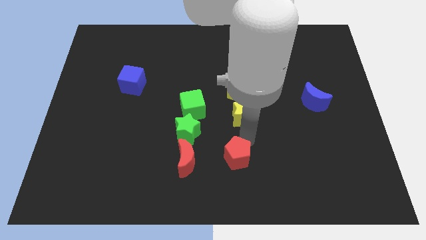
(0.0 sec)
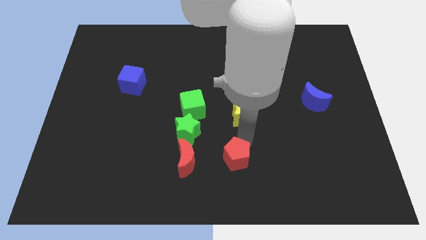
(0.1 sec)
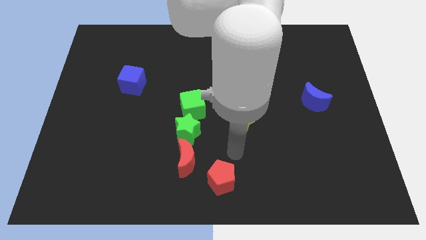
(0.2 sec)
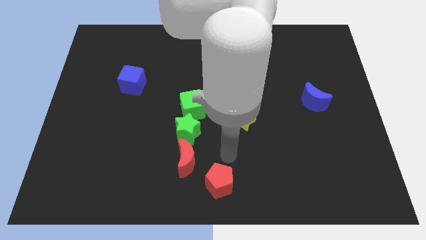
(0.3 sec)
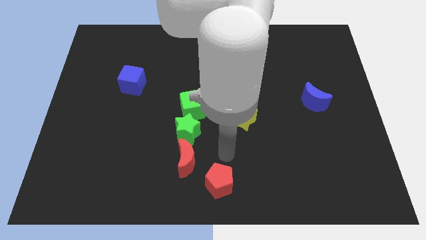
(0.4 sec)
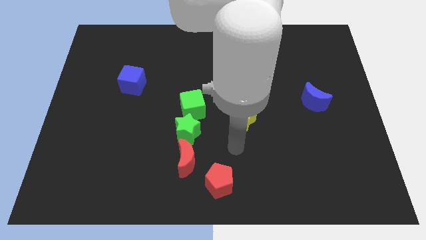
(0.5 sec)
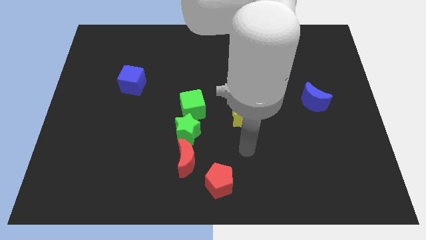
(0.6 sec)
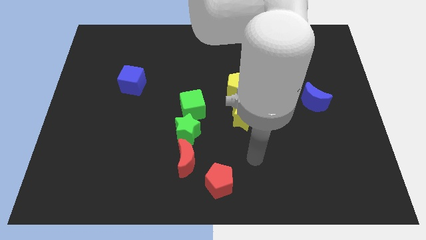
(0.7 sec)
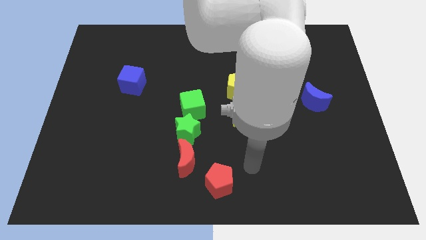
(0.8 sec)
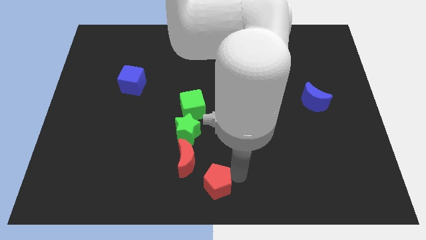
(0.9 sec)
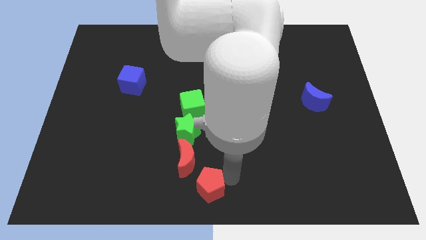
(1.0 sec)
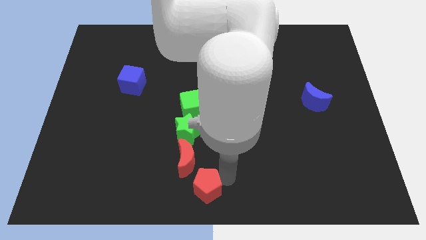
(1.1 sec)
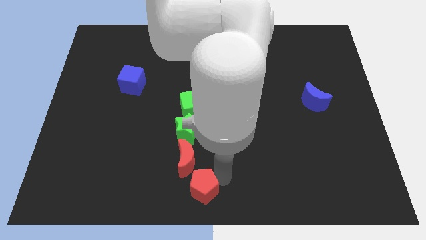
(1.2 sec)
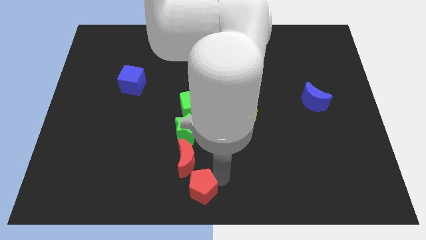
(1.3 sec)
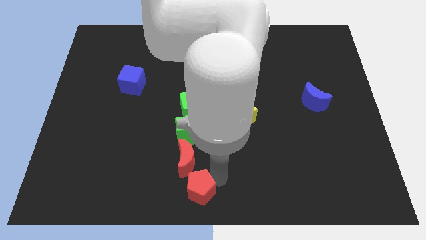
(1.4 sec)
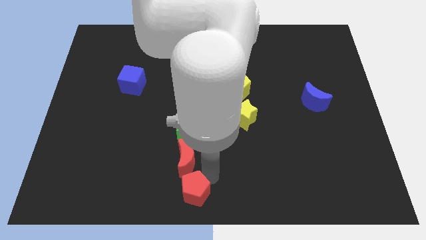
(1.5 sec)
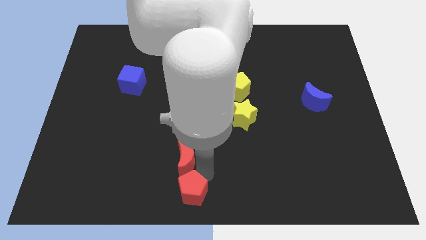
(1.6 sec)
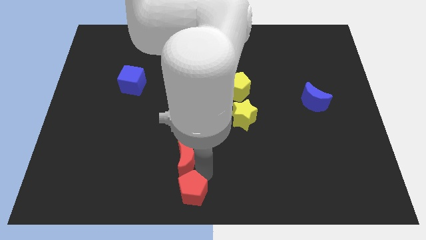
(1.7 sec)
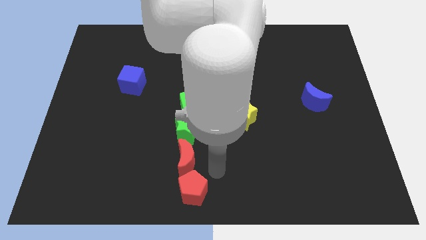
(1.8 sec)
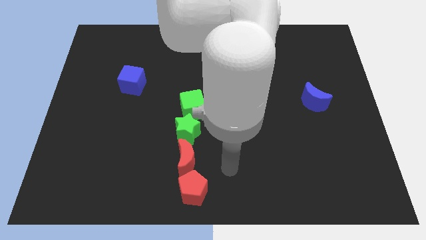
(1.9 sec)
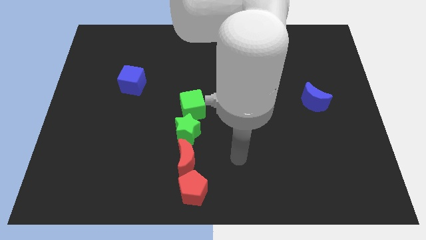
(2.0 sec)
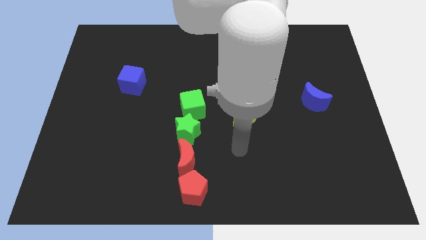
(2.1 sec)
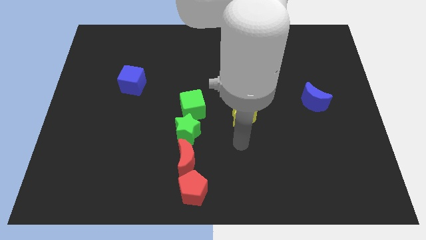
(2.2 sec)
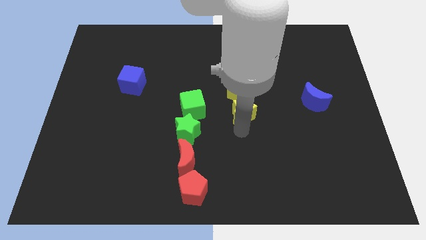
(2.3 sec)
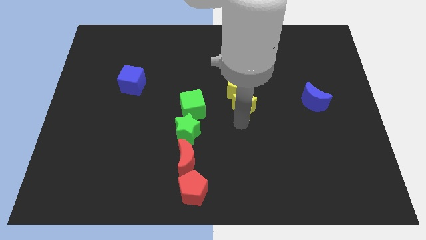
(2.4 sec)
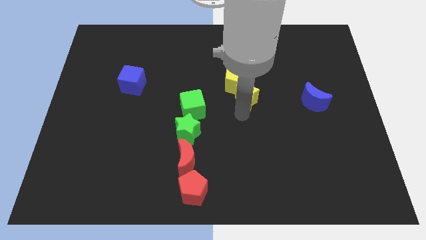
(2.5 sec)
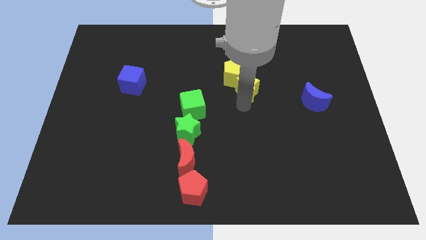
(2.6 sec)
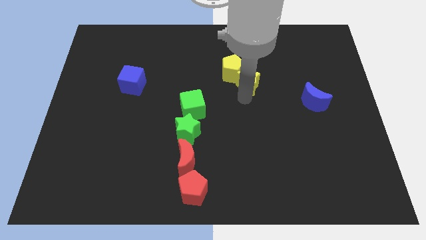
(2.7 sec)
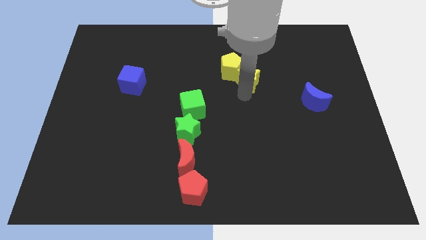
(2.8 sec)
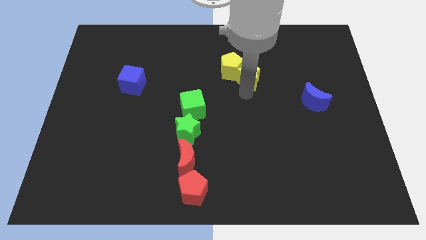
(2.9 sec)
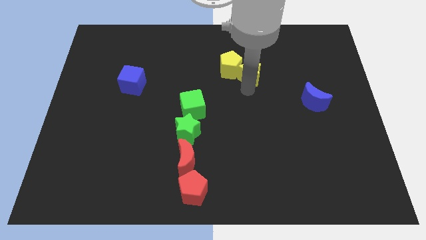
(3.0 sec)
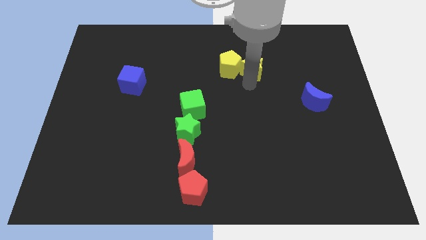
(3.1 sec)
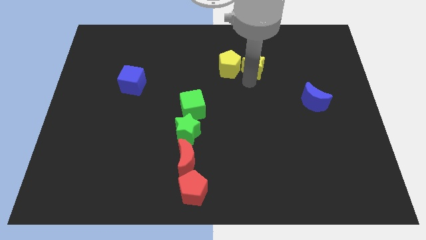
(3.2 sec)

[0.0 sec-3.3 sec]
push the yellow star and yellow pentagon towards the top center

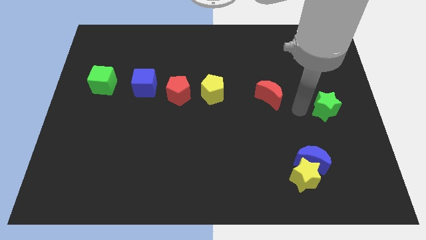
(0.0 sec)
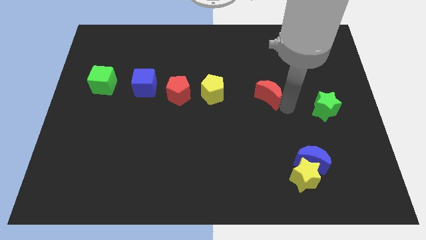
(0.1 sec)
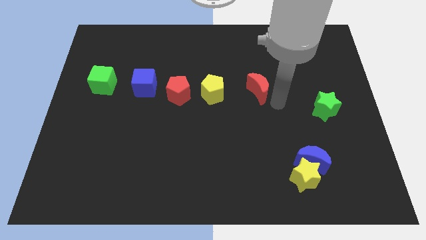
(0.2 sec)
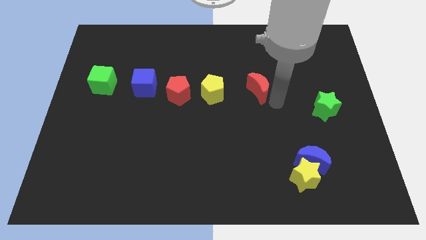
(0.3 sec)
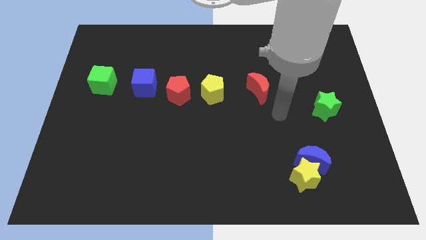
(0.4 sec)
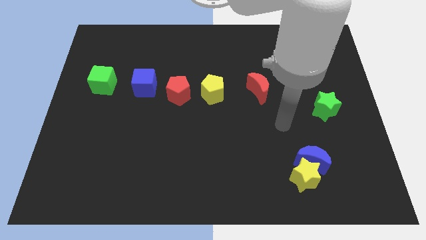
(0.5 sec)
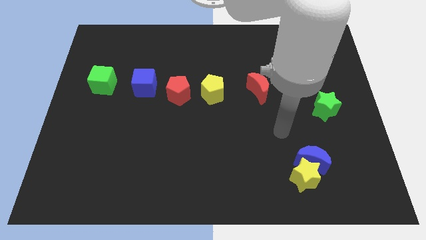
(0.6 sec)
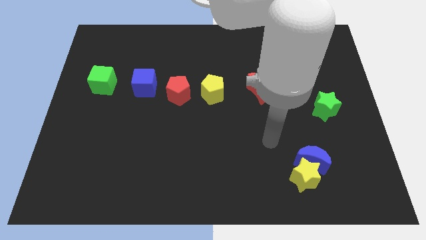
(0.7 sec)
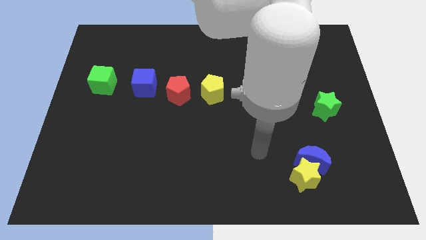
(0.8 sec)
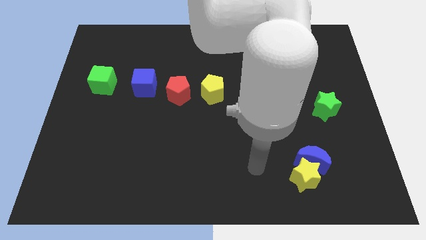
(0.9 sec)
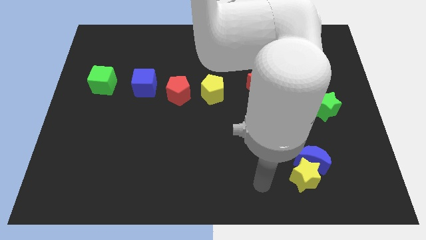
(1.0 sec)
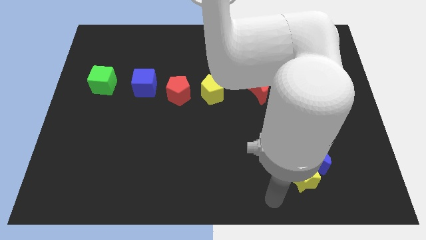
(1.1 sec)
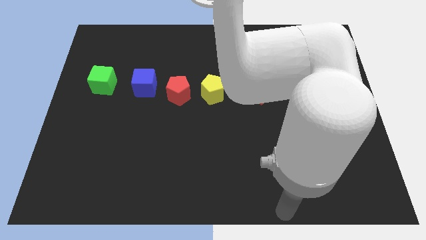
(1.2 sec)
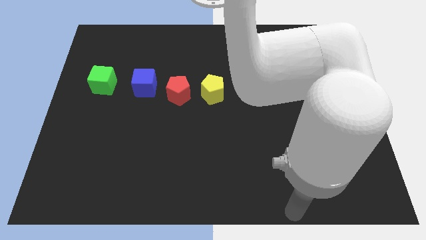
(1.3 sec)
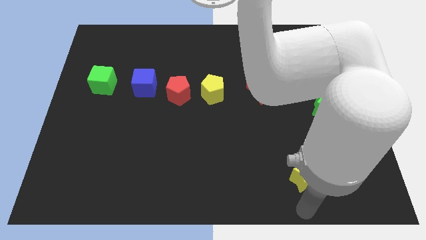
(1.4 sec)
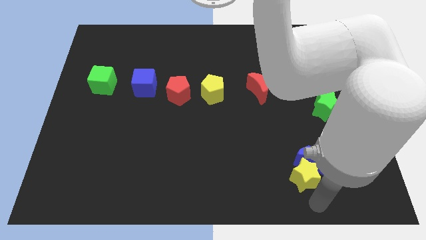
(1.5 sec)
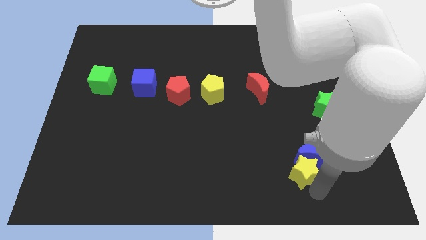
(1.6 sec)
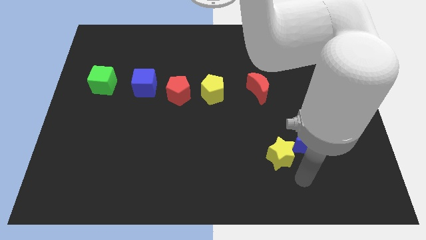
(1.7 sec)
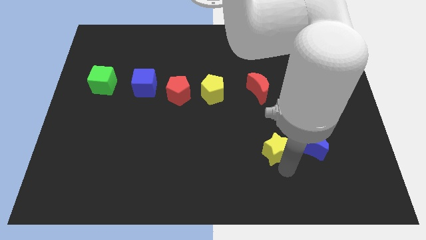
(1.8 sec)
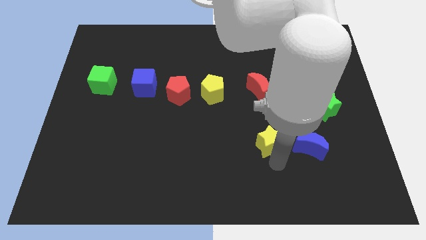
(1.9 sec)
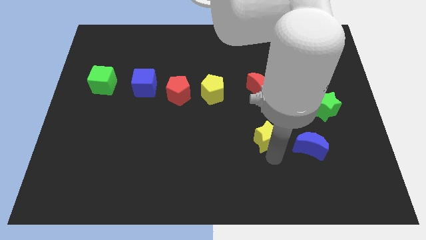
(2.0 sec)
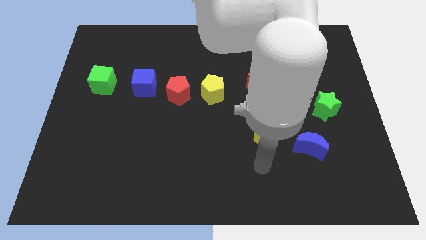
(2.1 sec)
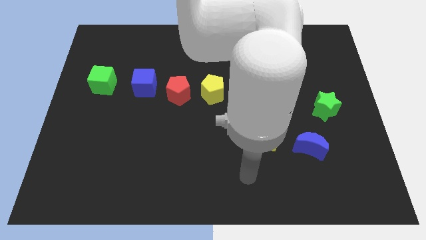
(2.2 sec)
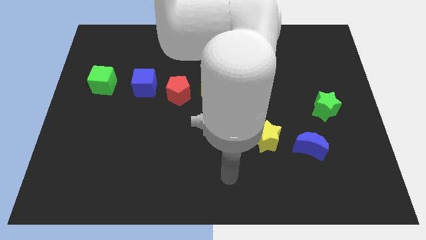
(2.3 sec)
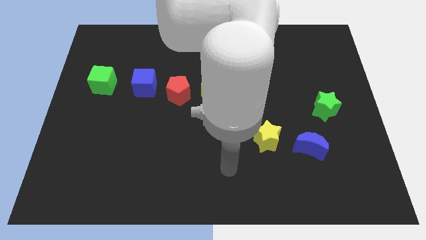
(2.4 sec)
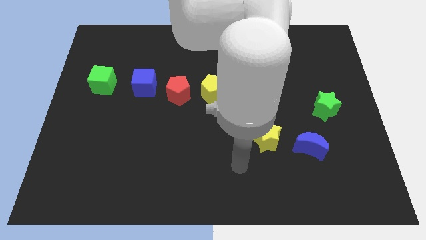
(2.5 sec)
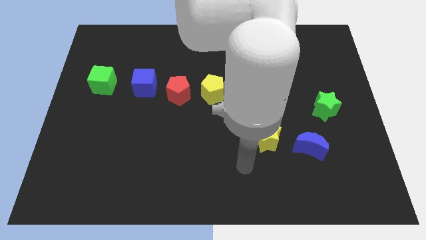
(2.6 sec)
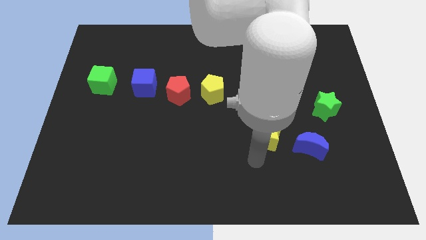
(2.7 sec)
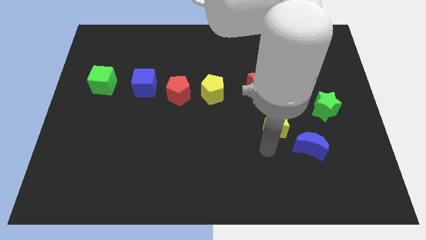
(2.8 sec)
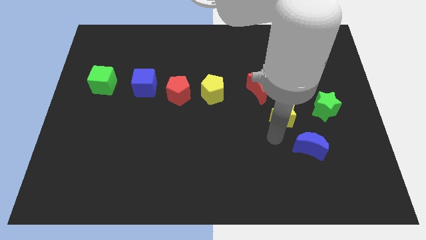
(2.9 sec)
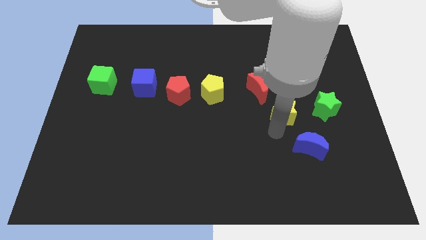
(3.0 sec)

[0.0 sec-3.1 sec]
place the yellow star in between the blue crescent and red crescent

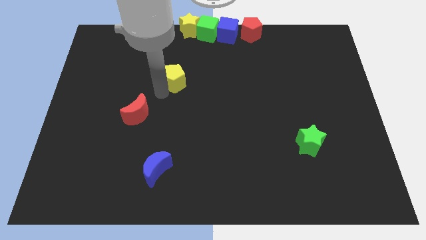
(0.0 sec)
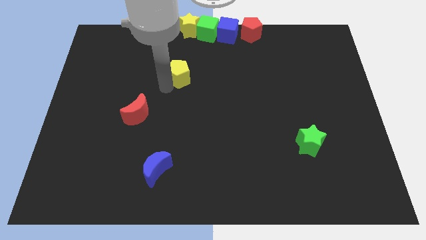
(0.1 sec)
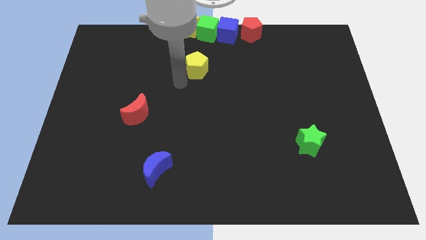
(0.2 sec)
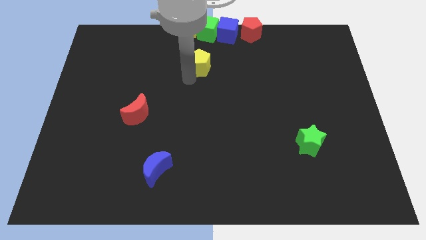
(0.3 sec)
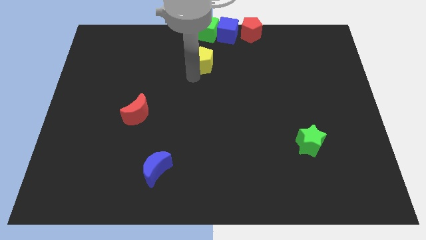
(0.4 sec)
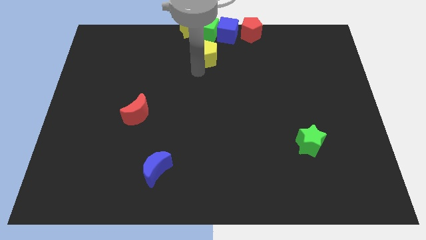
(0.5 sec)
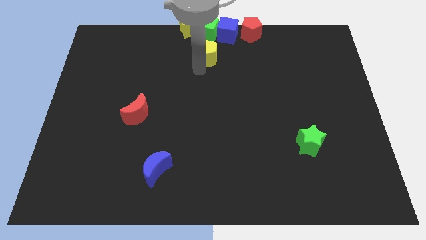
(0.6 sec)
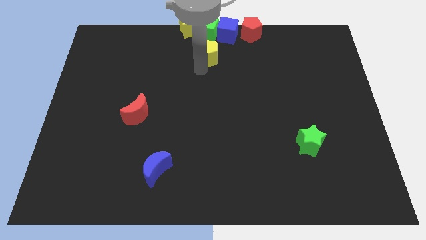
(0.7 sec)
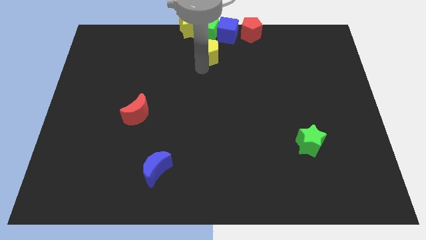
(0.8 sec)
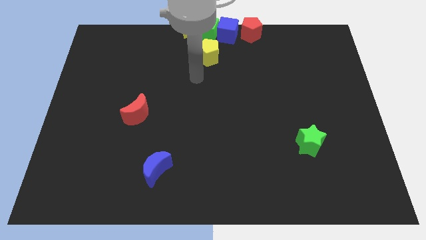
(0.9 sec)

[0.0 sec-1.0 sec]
move the yellow pentagon below the green cube

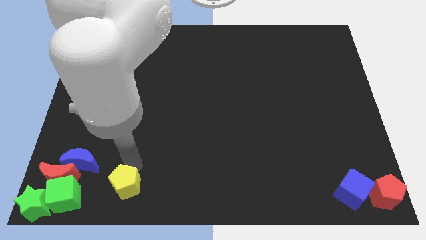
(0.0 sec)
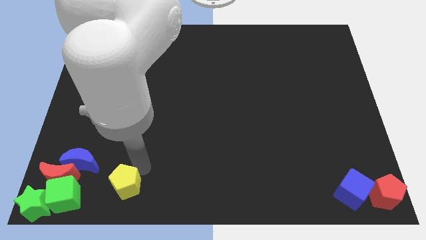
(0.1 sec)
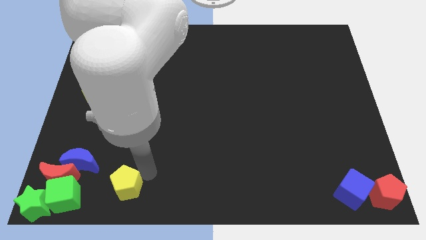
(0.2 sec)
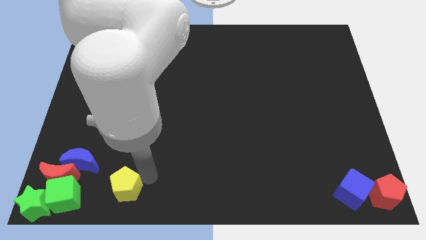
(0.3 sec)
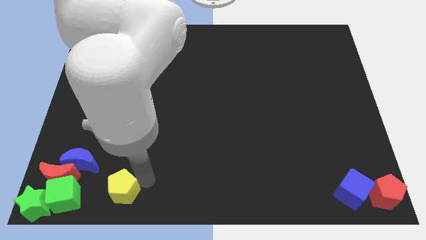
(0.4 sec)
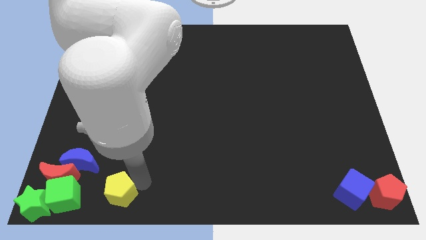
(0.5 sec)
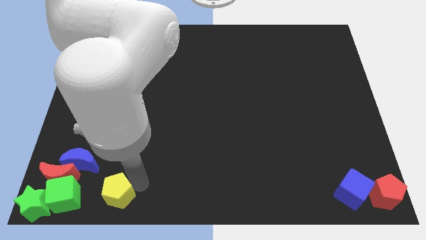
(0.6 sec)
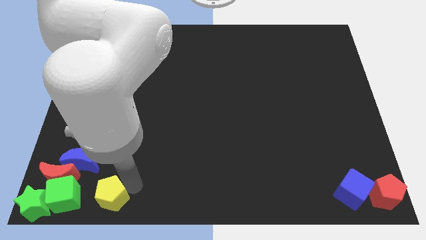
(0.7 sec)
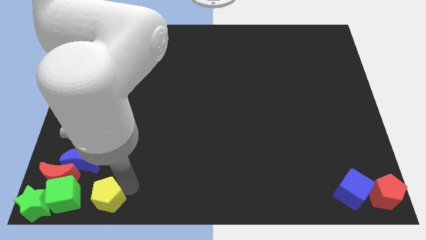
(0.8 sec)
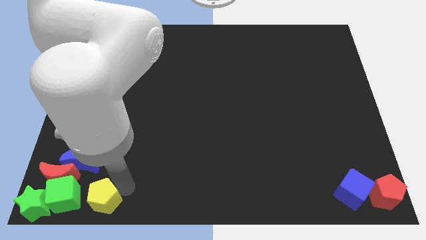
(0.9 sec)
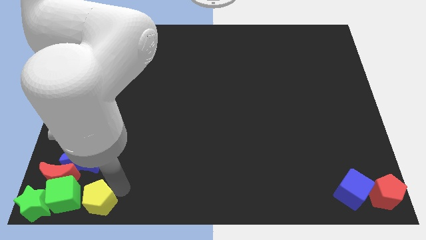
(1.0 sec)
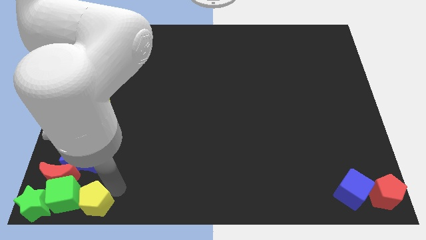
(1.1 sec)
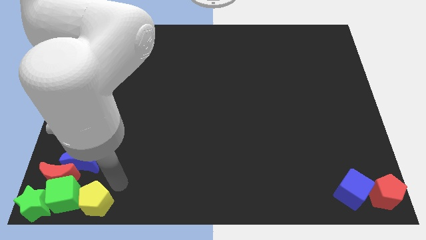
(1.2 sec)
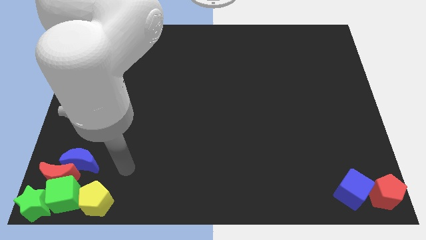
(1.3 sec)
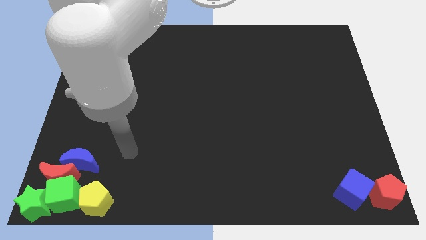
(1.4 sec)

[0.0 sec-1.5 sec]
push the yellow pentagon to the right of the green cube
